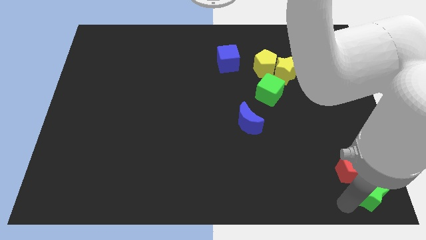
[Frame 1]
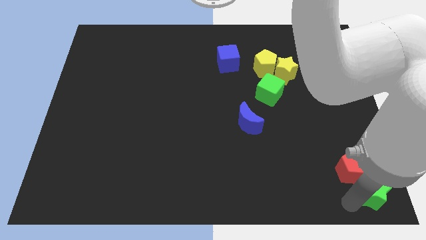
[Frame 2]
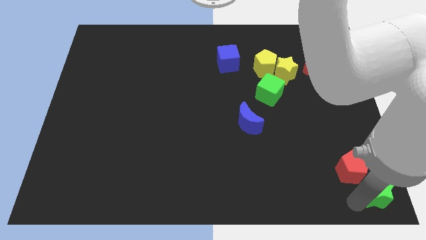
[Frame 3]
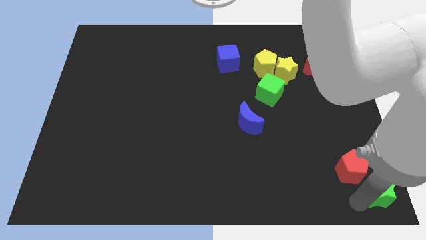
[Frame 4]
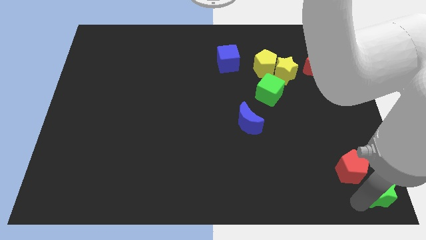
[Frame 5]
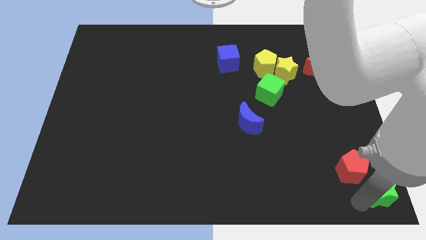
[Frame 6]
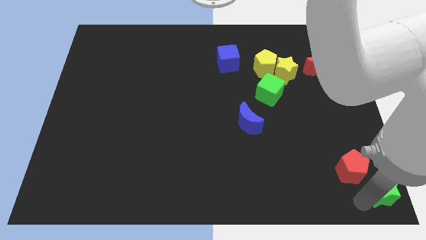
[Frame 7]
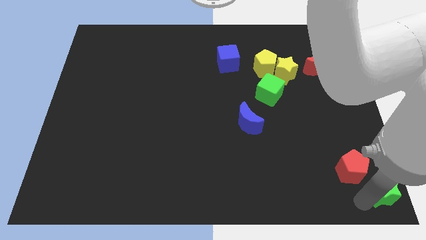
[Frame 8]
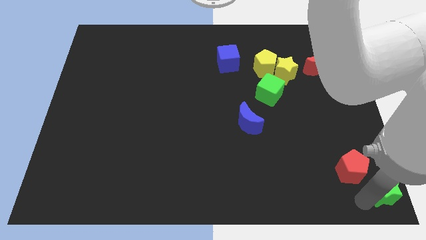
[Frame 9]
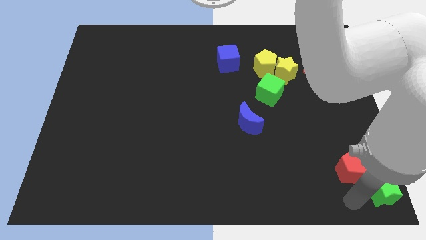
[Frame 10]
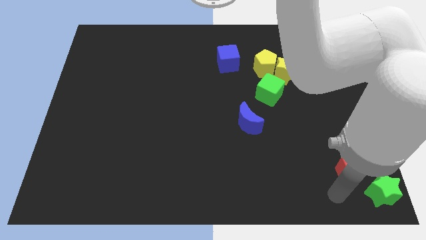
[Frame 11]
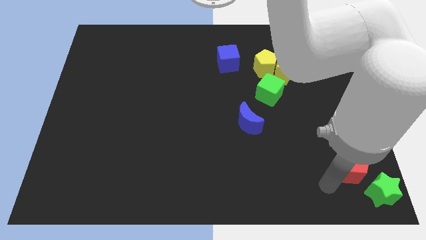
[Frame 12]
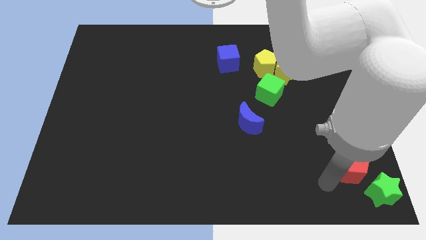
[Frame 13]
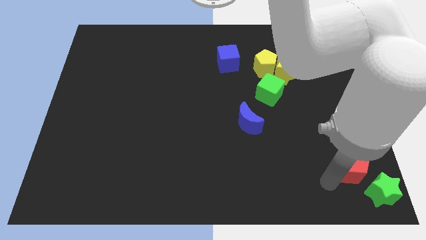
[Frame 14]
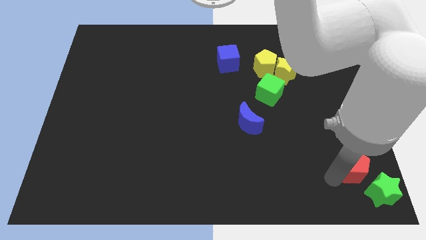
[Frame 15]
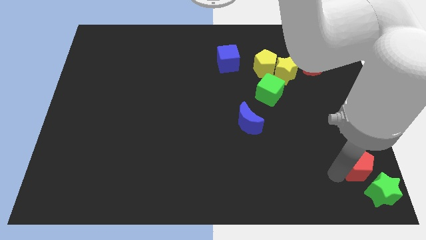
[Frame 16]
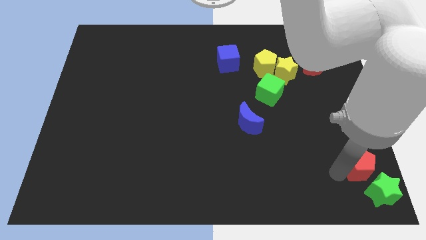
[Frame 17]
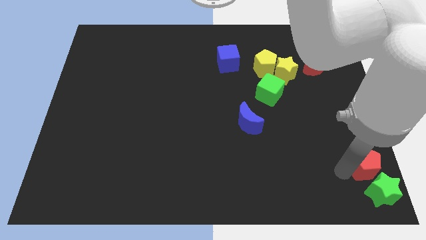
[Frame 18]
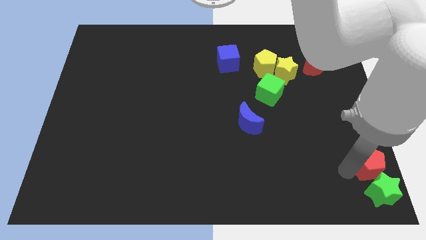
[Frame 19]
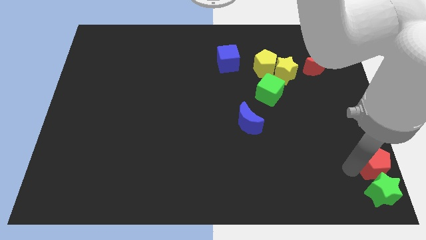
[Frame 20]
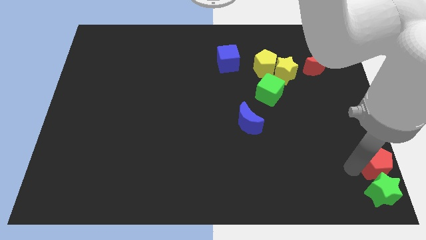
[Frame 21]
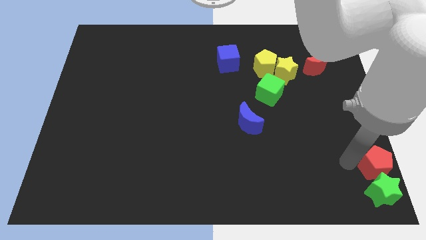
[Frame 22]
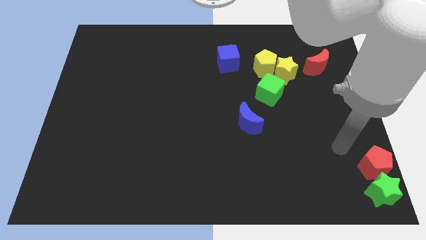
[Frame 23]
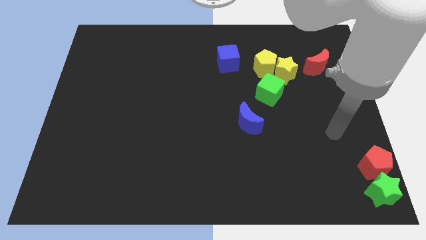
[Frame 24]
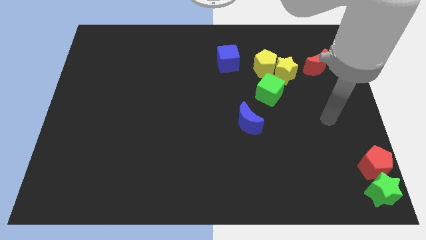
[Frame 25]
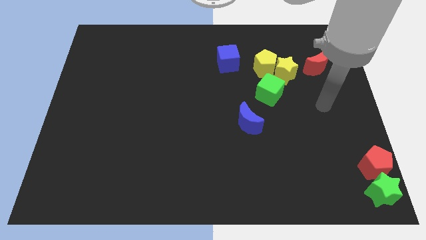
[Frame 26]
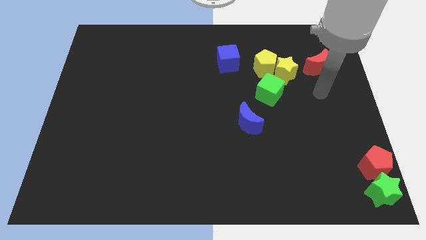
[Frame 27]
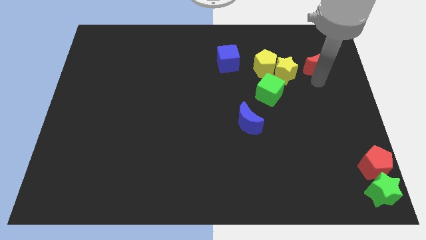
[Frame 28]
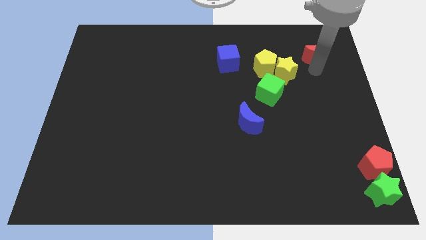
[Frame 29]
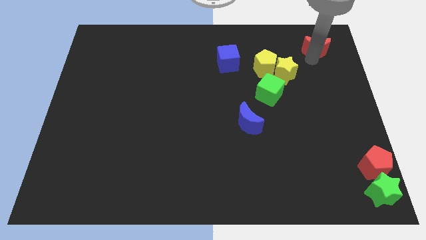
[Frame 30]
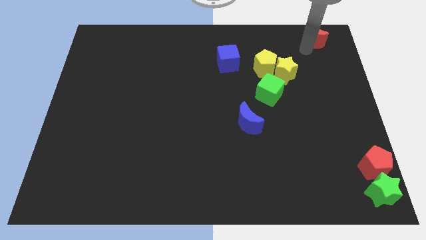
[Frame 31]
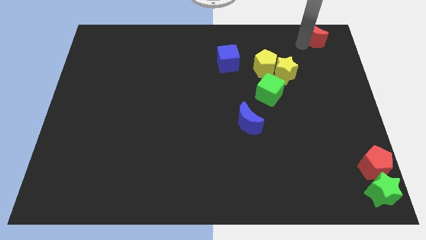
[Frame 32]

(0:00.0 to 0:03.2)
move the red pentagon above the green star

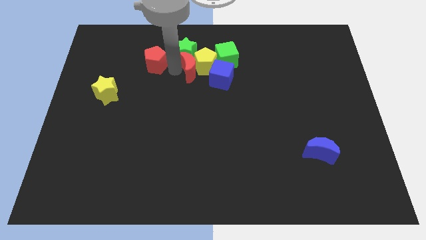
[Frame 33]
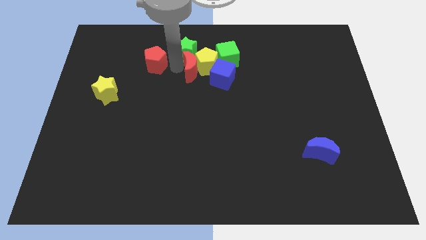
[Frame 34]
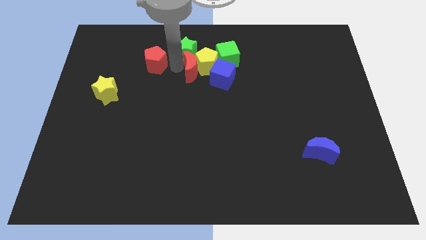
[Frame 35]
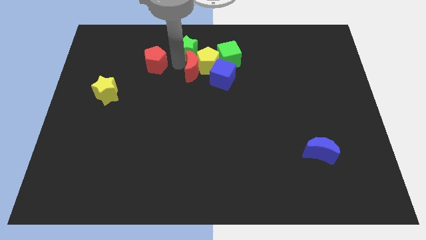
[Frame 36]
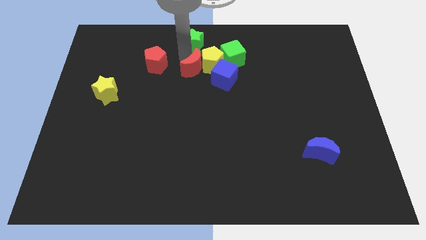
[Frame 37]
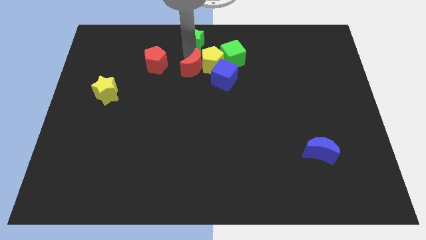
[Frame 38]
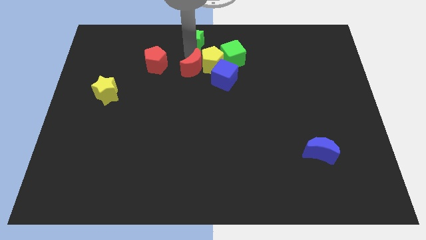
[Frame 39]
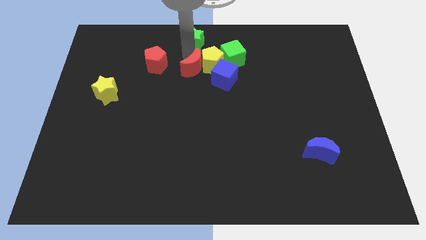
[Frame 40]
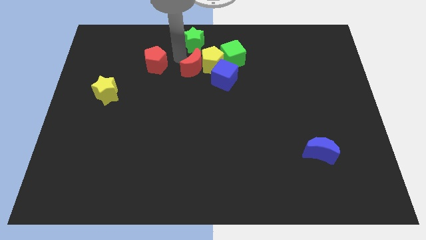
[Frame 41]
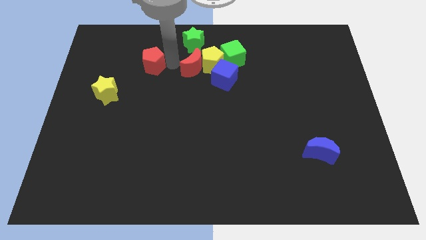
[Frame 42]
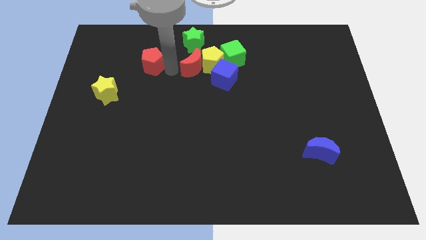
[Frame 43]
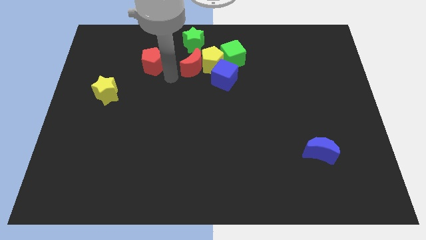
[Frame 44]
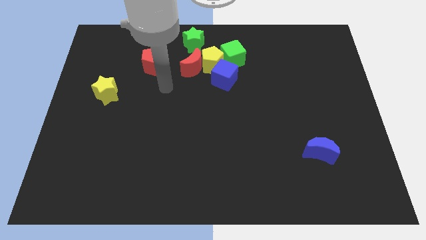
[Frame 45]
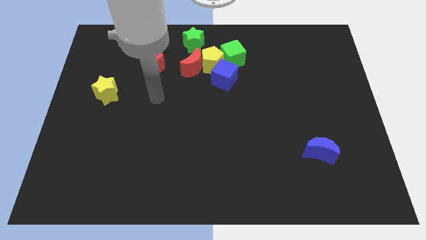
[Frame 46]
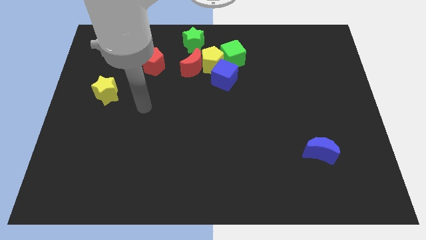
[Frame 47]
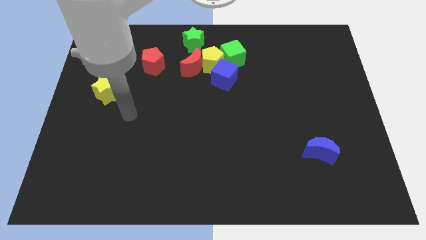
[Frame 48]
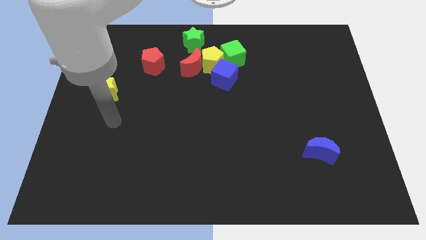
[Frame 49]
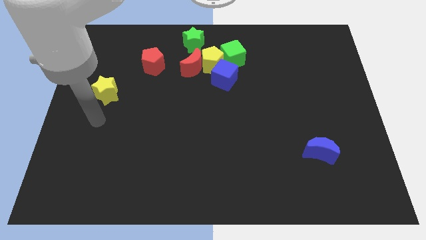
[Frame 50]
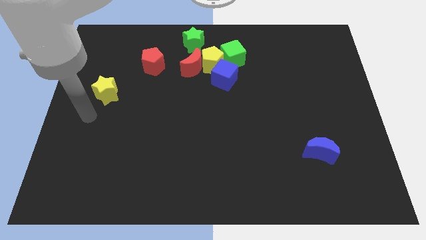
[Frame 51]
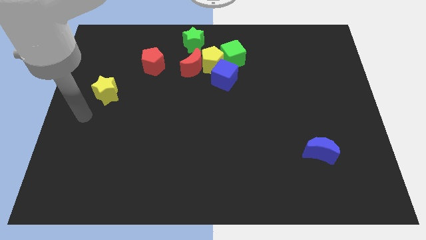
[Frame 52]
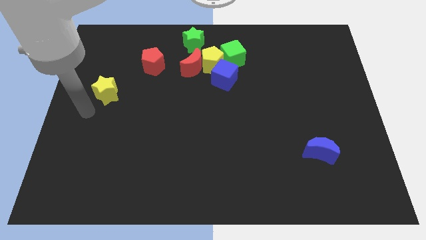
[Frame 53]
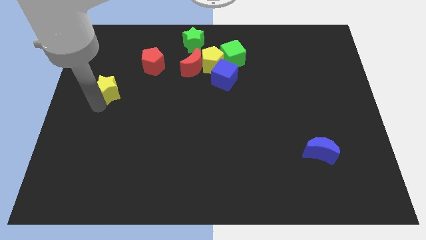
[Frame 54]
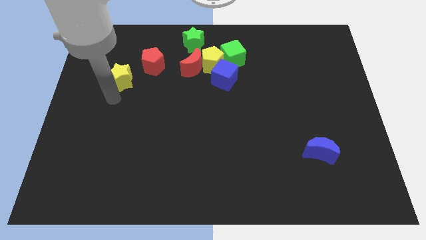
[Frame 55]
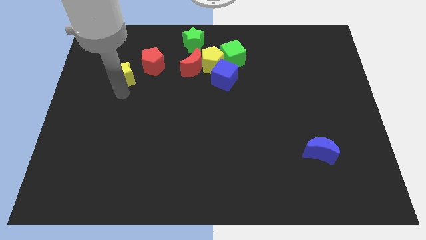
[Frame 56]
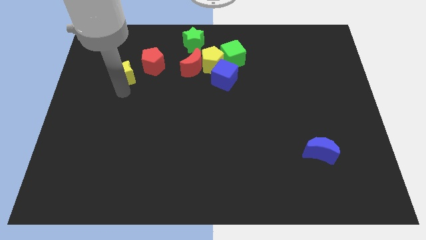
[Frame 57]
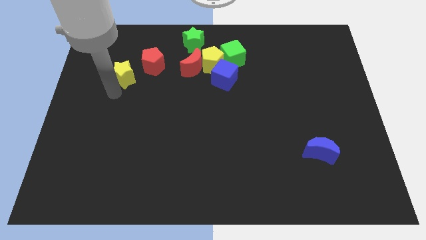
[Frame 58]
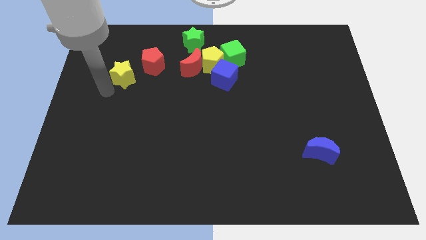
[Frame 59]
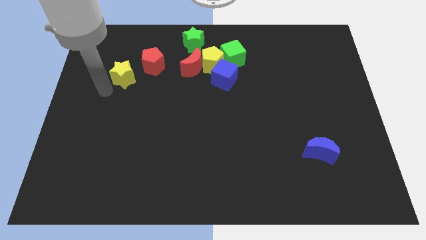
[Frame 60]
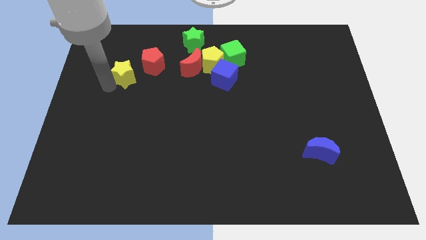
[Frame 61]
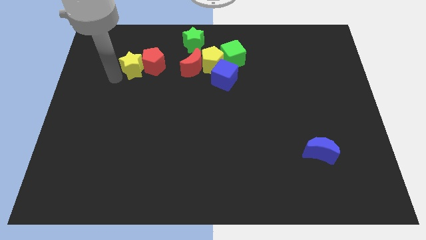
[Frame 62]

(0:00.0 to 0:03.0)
push the red crescent into yellow pentagon

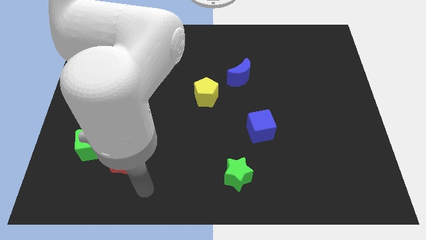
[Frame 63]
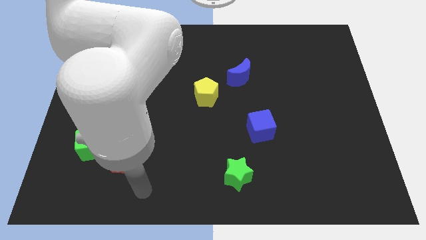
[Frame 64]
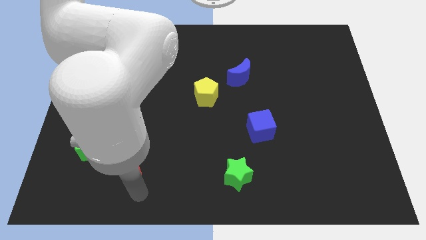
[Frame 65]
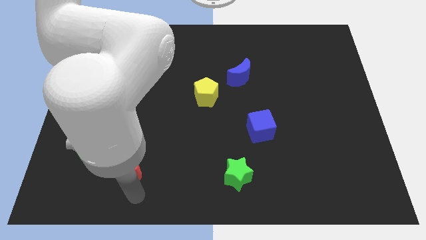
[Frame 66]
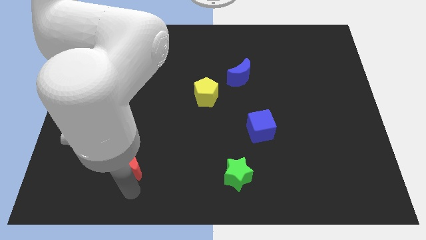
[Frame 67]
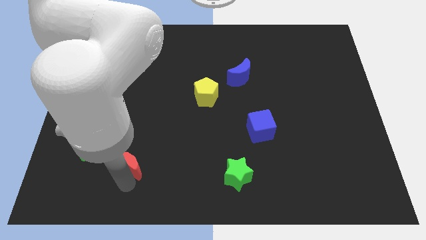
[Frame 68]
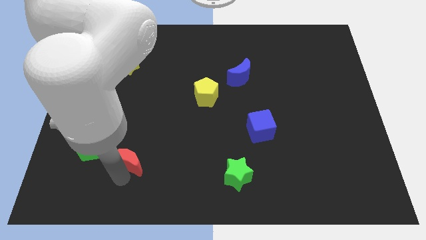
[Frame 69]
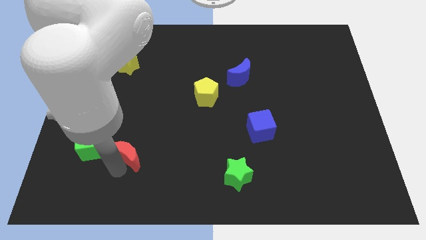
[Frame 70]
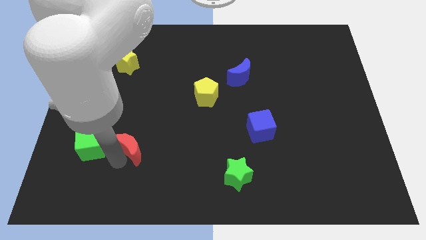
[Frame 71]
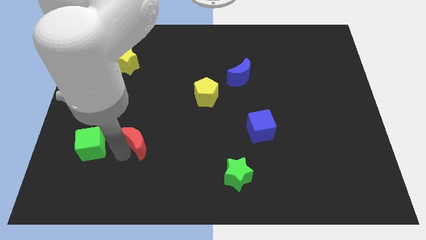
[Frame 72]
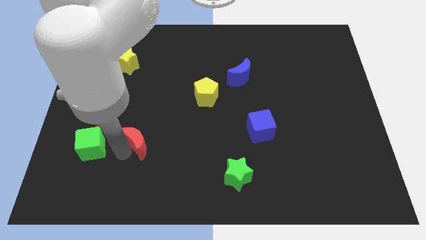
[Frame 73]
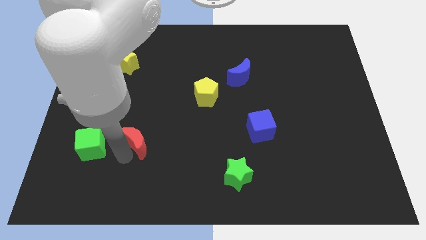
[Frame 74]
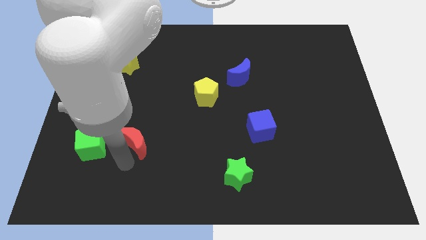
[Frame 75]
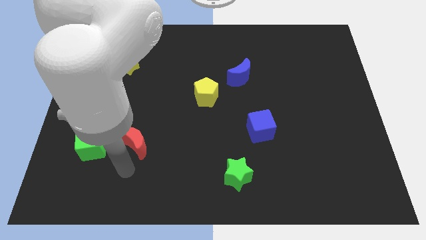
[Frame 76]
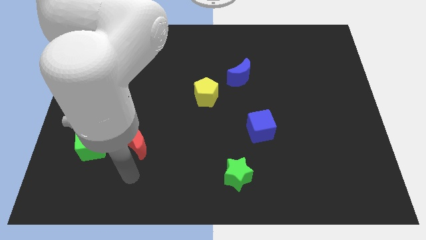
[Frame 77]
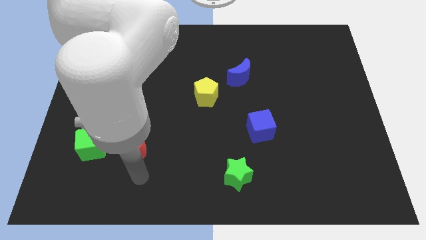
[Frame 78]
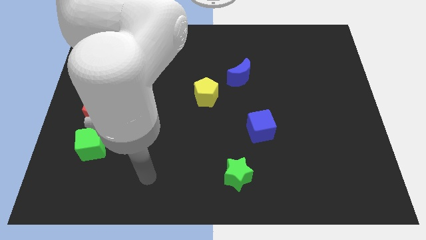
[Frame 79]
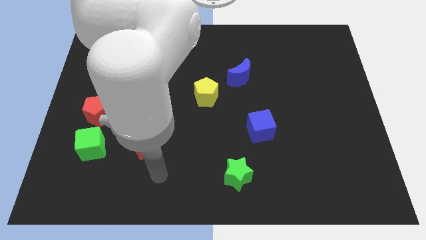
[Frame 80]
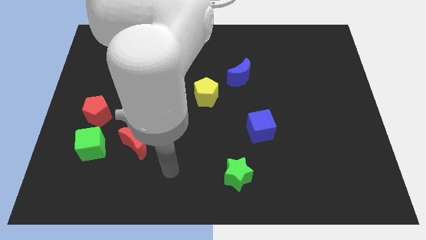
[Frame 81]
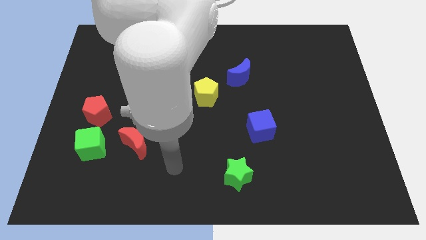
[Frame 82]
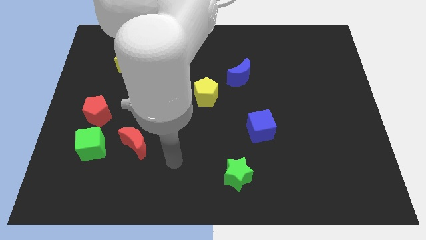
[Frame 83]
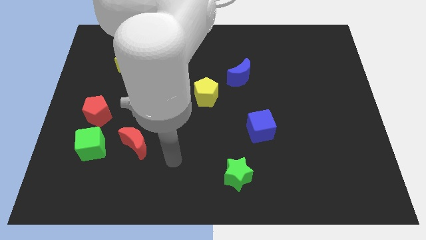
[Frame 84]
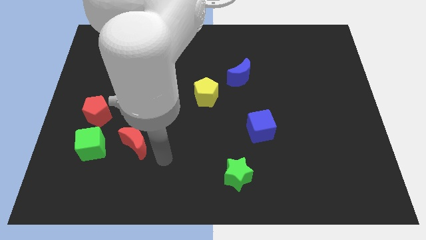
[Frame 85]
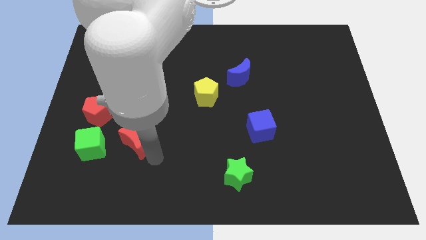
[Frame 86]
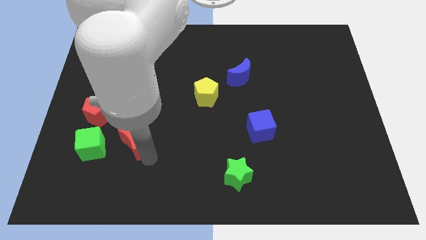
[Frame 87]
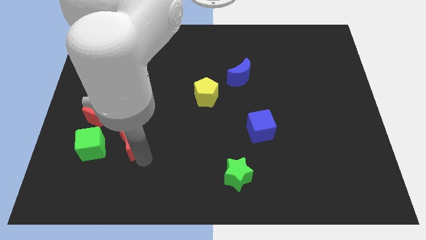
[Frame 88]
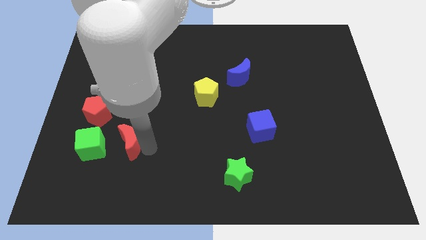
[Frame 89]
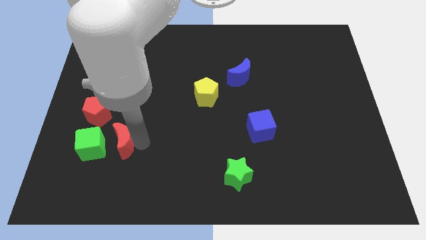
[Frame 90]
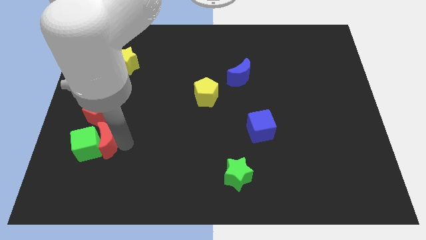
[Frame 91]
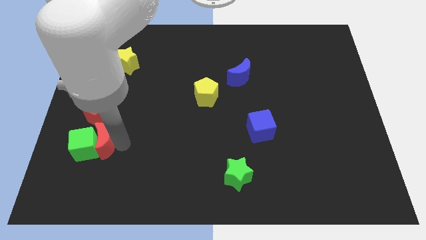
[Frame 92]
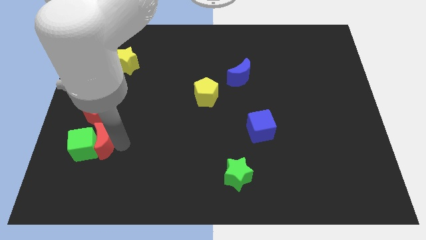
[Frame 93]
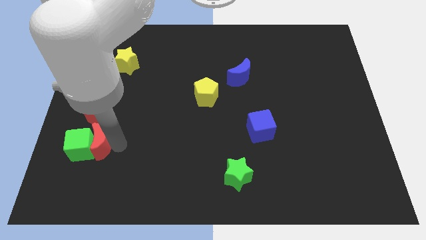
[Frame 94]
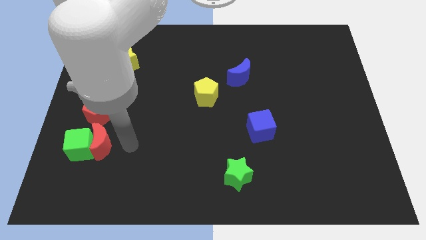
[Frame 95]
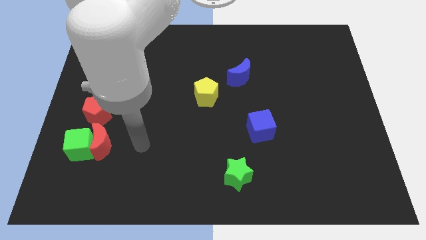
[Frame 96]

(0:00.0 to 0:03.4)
drag red crescent below red pentagon
